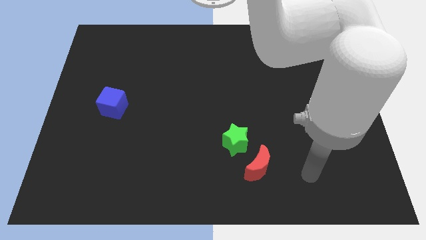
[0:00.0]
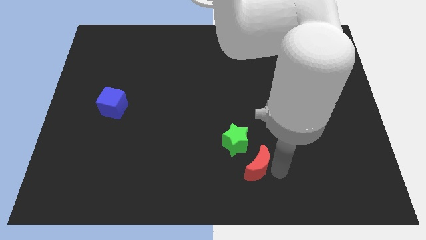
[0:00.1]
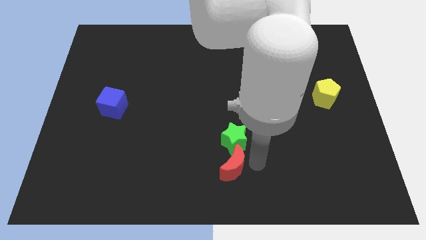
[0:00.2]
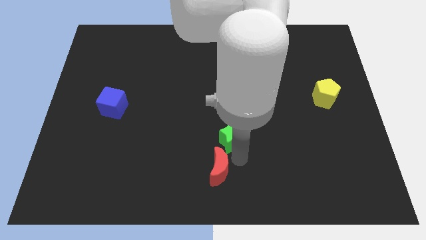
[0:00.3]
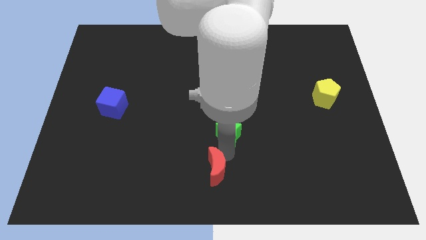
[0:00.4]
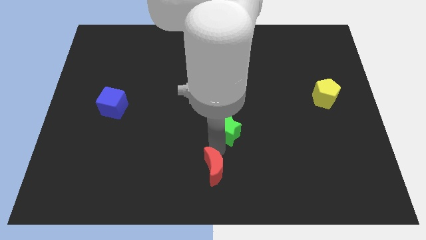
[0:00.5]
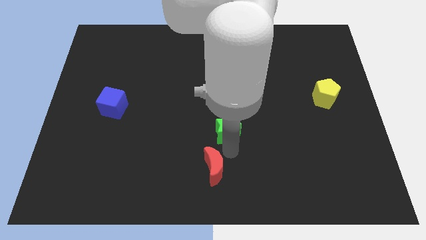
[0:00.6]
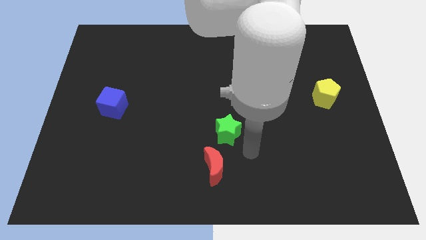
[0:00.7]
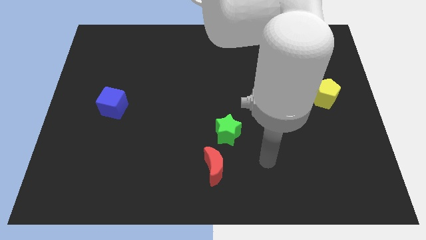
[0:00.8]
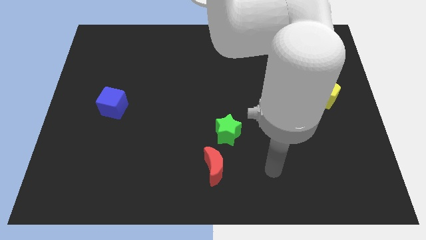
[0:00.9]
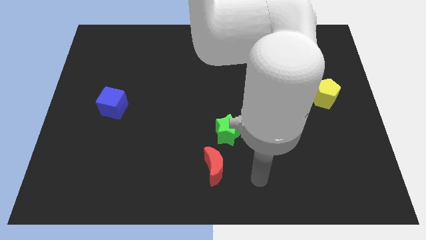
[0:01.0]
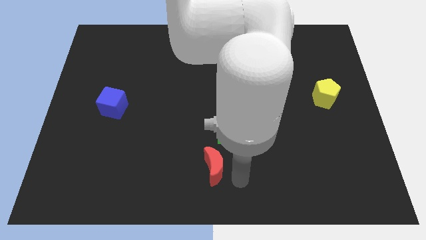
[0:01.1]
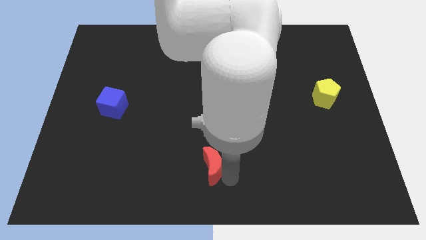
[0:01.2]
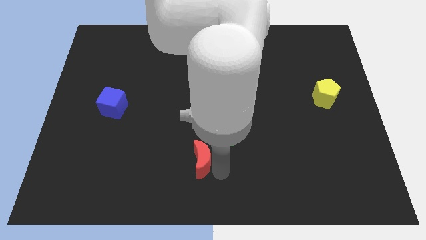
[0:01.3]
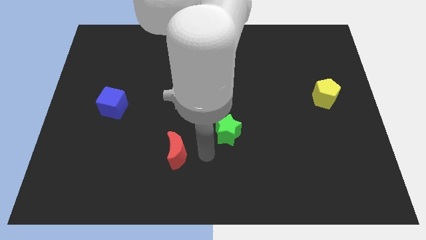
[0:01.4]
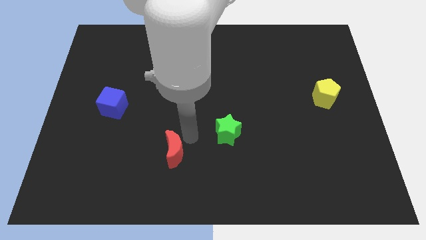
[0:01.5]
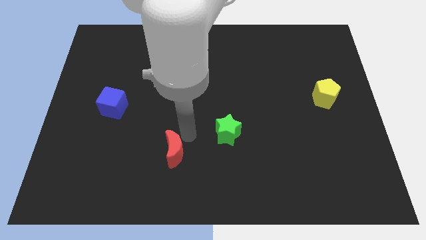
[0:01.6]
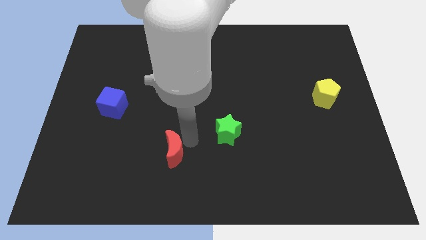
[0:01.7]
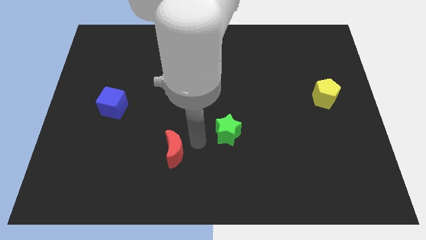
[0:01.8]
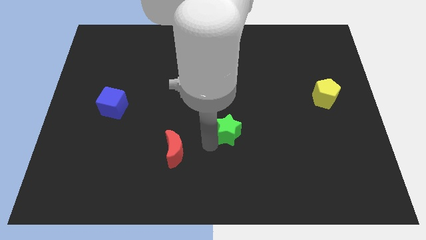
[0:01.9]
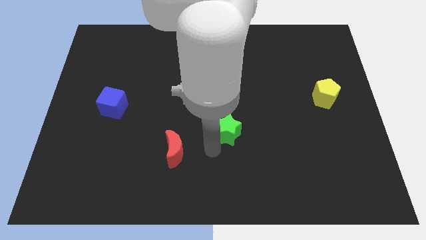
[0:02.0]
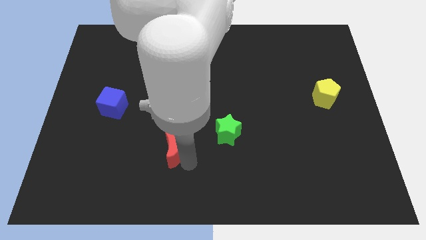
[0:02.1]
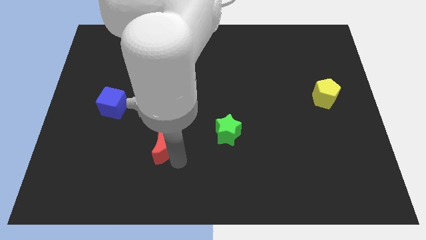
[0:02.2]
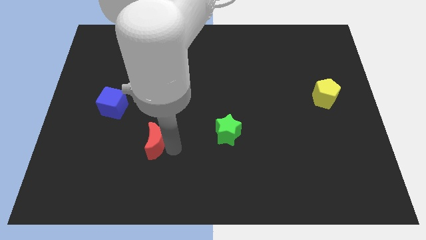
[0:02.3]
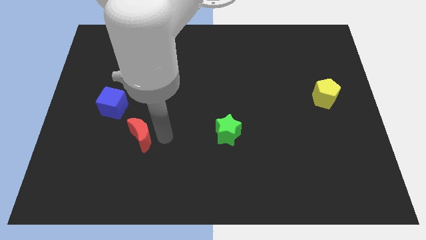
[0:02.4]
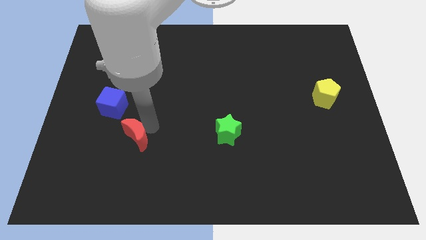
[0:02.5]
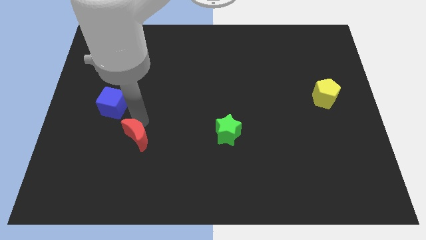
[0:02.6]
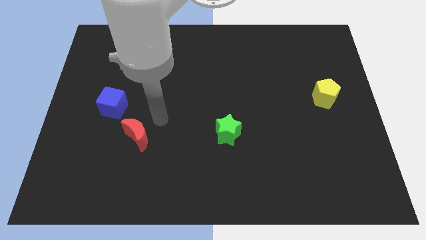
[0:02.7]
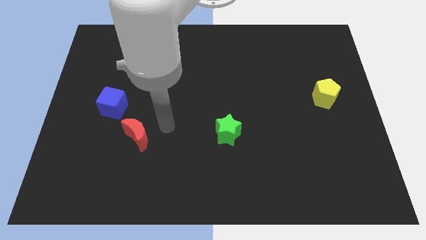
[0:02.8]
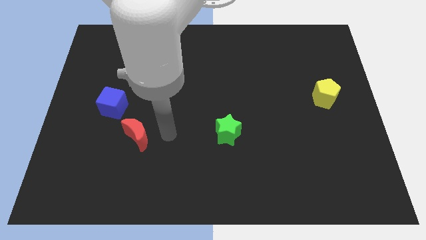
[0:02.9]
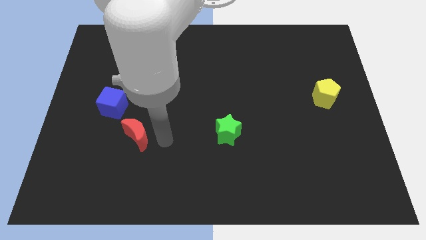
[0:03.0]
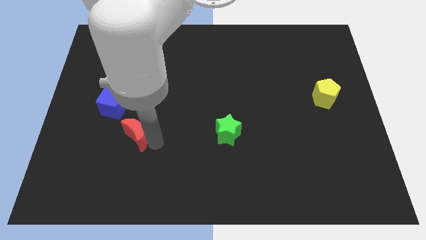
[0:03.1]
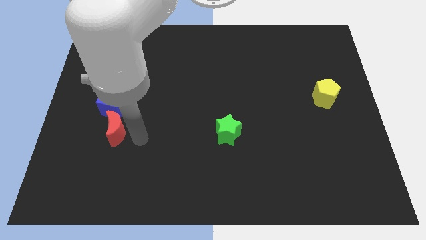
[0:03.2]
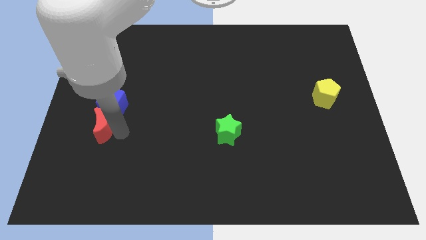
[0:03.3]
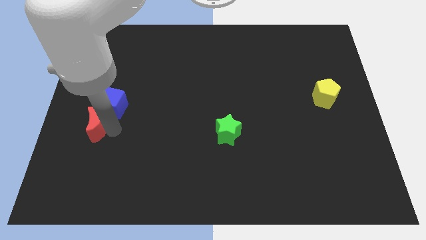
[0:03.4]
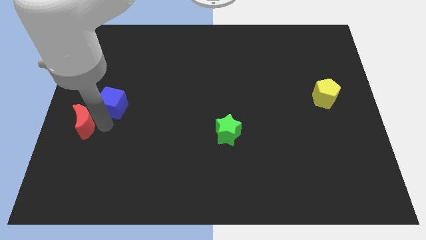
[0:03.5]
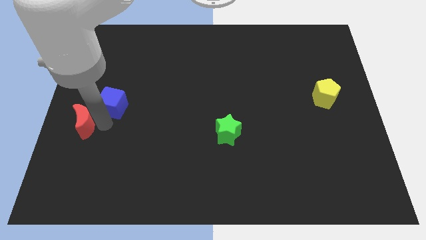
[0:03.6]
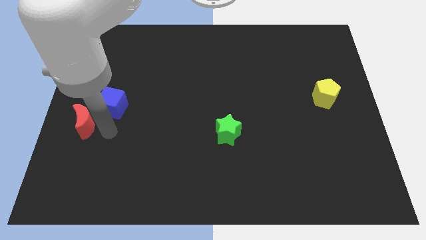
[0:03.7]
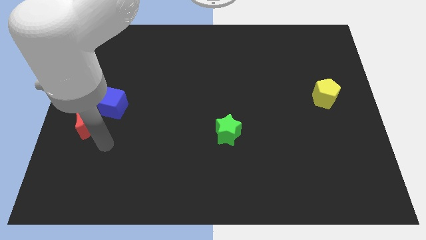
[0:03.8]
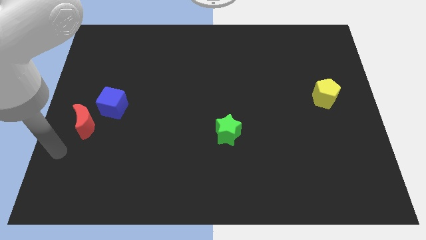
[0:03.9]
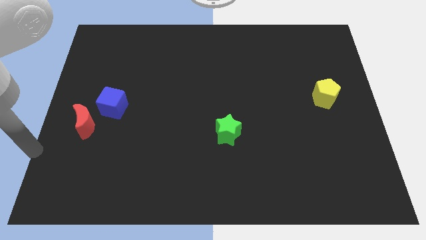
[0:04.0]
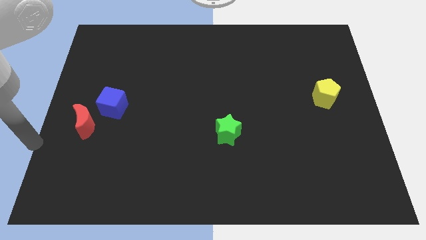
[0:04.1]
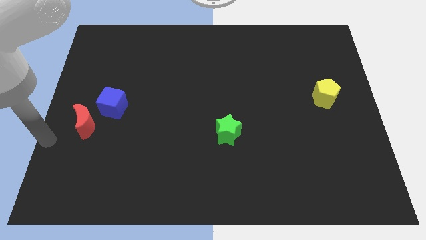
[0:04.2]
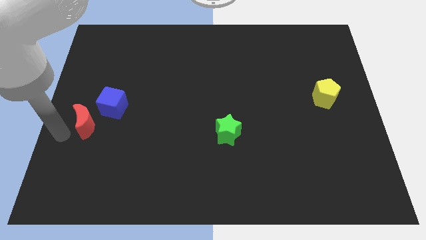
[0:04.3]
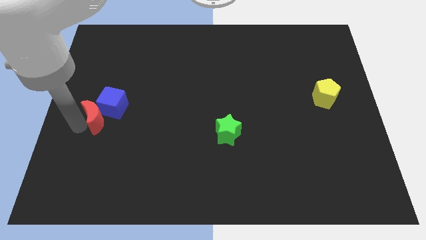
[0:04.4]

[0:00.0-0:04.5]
slide the red moon to the blue block

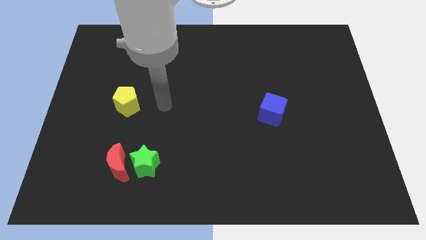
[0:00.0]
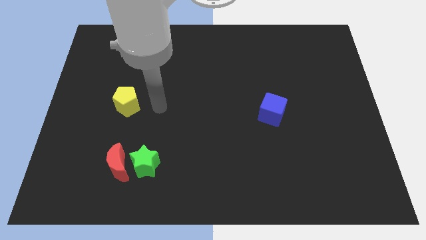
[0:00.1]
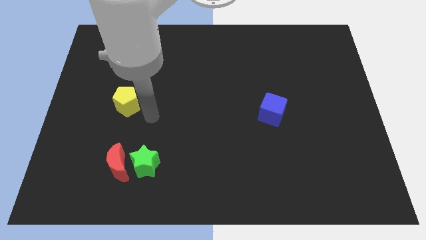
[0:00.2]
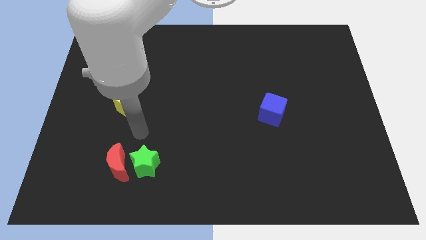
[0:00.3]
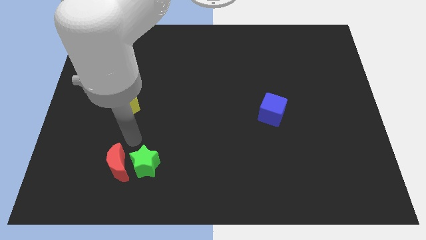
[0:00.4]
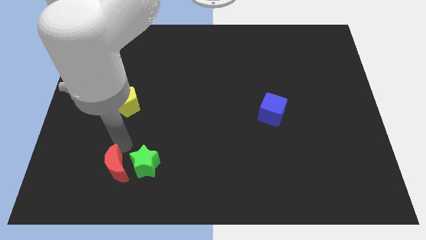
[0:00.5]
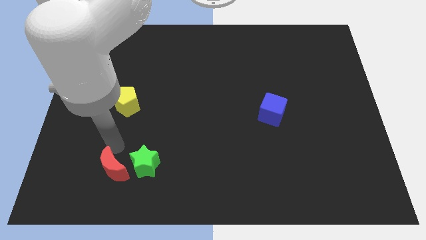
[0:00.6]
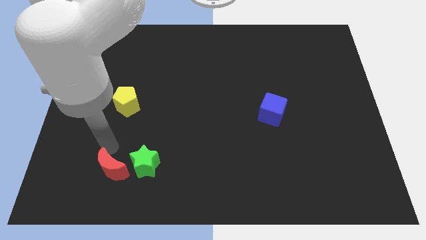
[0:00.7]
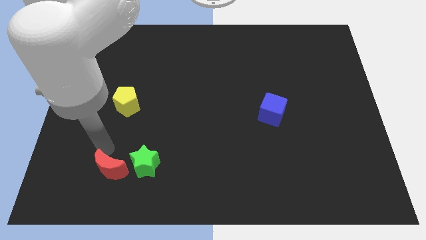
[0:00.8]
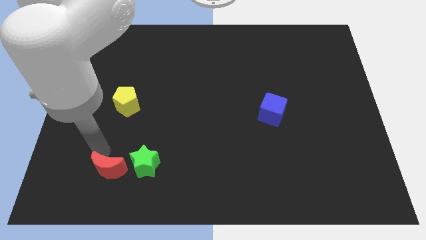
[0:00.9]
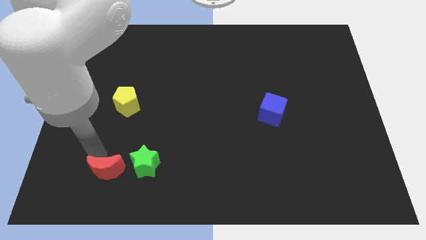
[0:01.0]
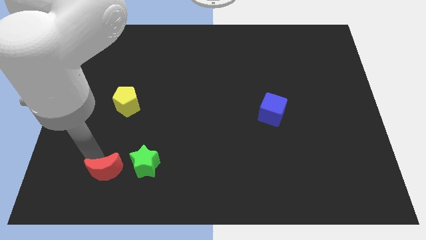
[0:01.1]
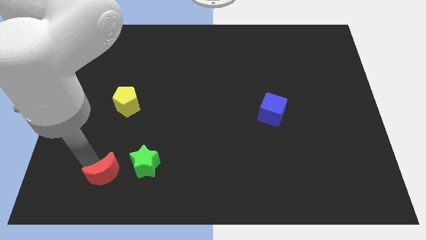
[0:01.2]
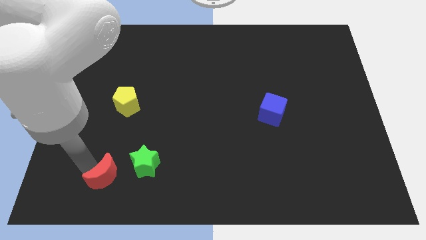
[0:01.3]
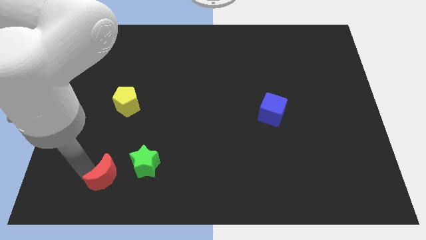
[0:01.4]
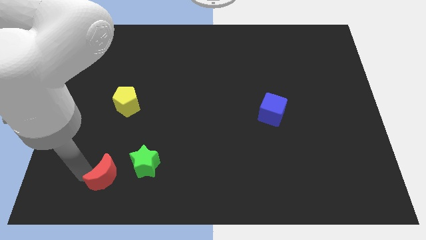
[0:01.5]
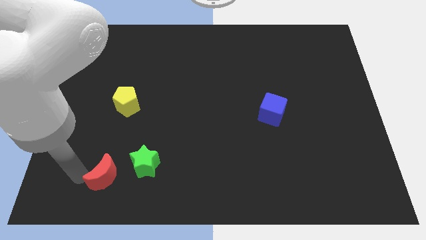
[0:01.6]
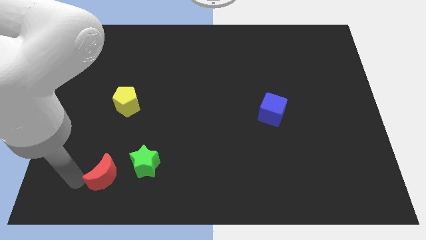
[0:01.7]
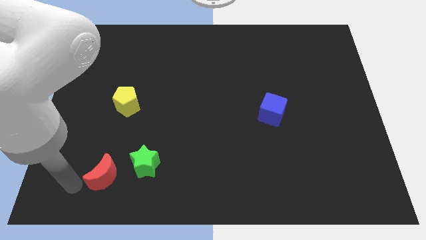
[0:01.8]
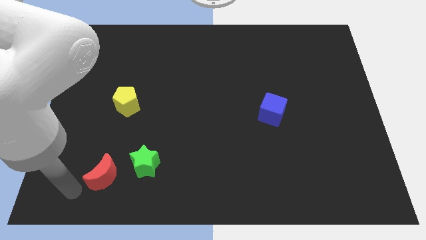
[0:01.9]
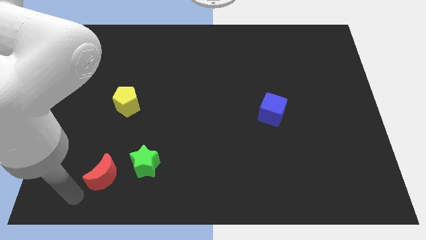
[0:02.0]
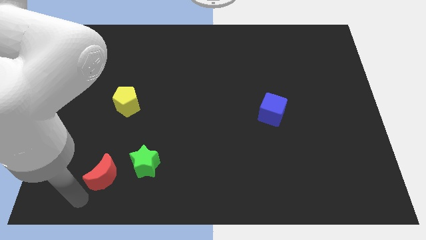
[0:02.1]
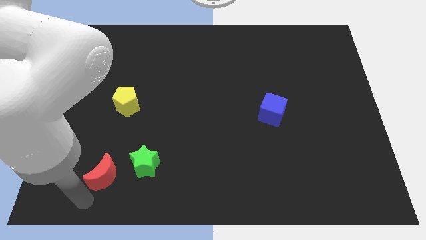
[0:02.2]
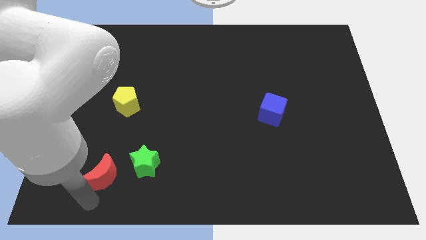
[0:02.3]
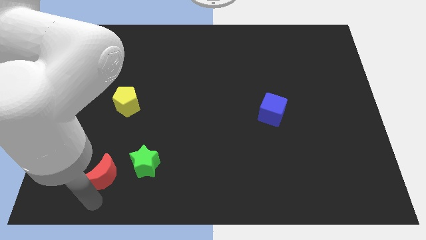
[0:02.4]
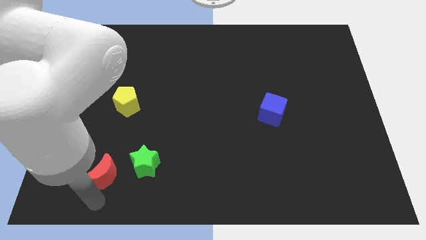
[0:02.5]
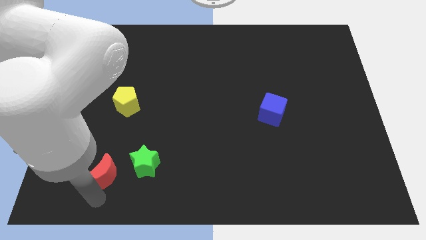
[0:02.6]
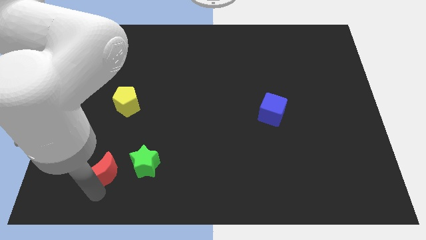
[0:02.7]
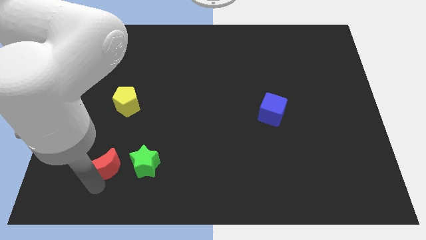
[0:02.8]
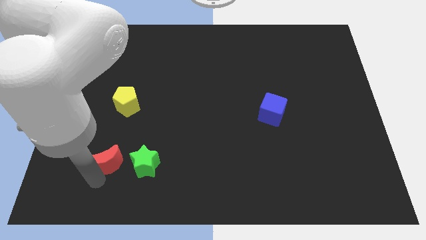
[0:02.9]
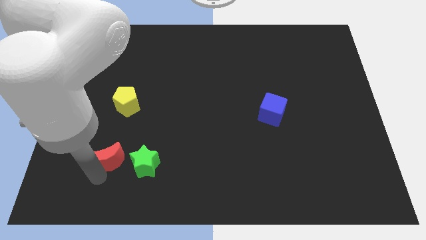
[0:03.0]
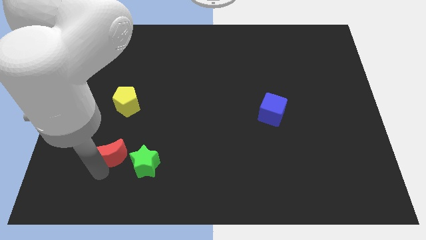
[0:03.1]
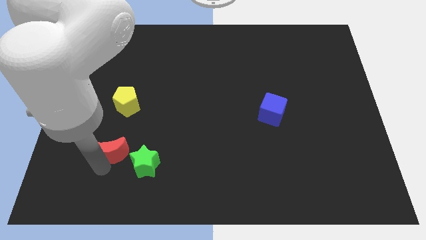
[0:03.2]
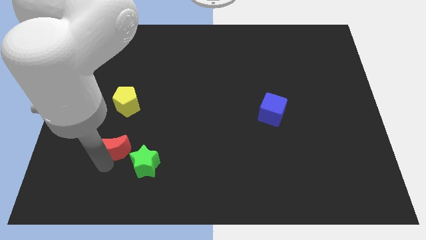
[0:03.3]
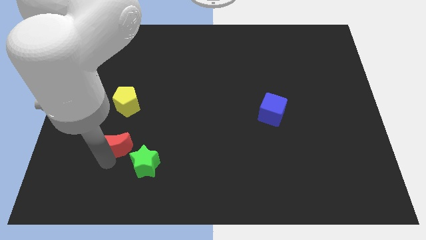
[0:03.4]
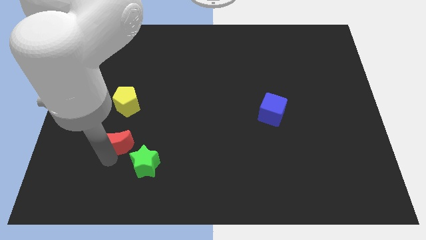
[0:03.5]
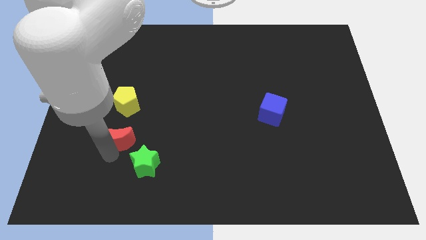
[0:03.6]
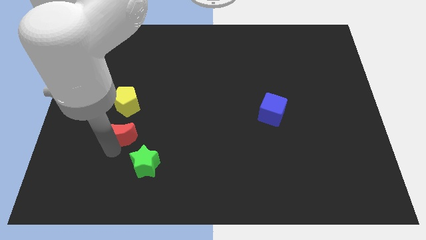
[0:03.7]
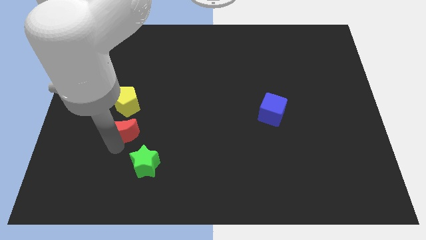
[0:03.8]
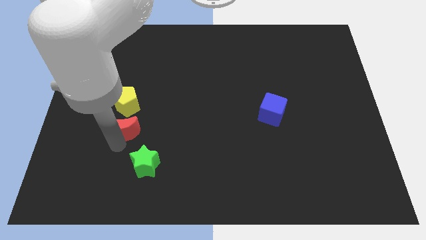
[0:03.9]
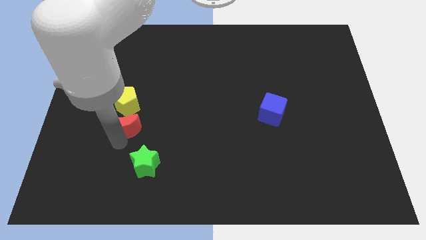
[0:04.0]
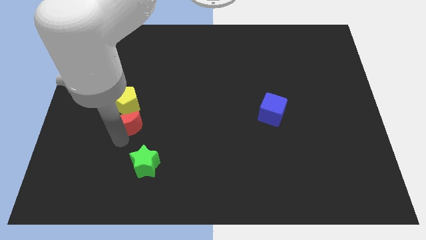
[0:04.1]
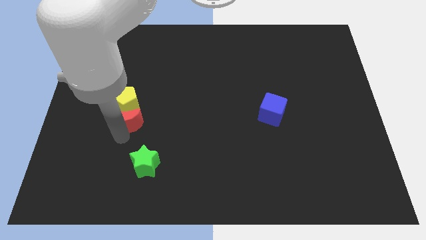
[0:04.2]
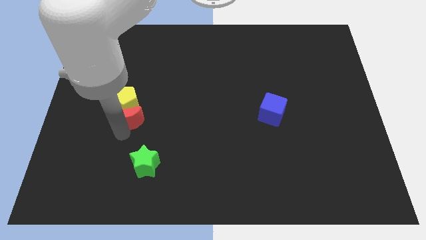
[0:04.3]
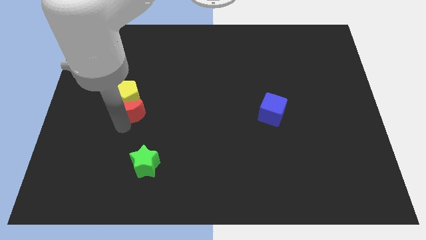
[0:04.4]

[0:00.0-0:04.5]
move the moon next to the yellow pentagon
